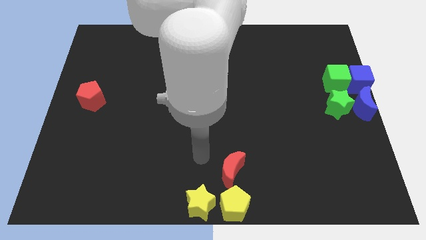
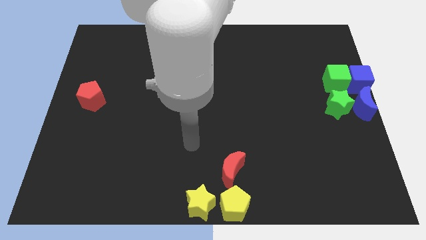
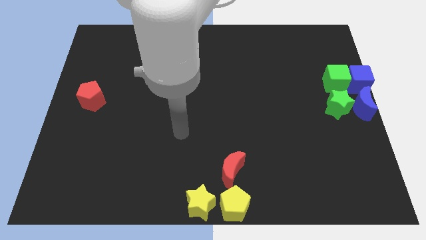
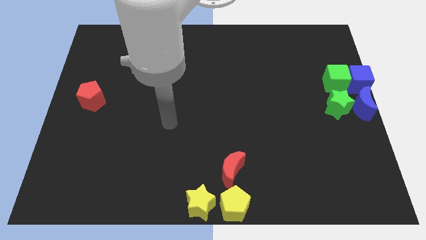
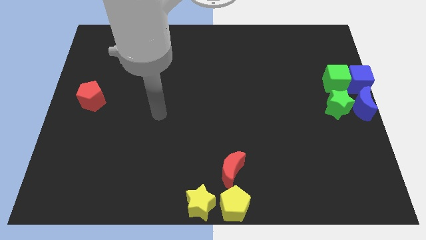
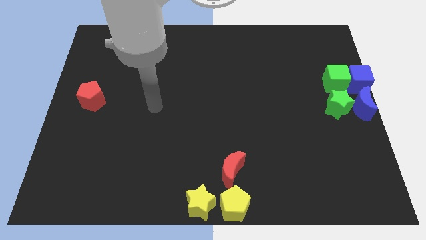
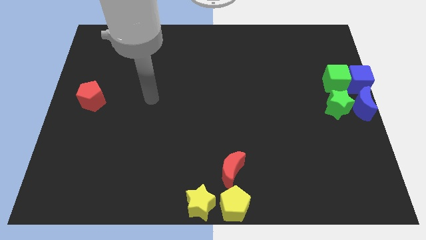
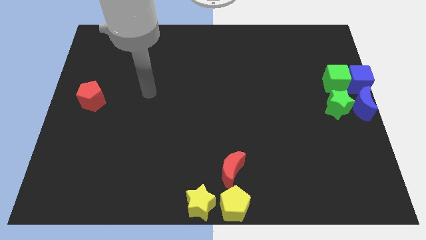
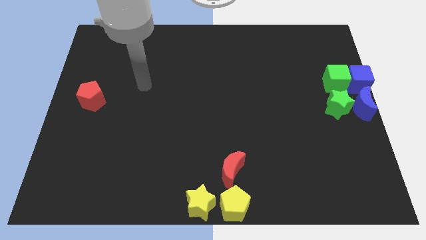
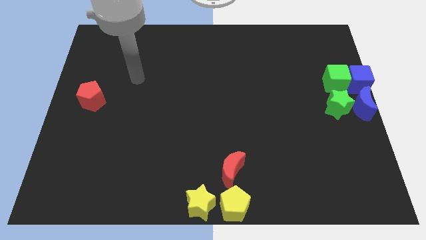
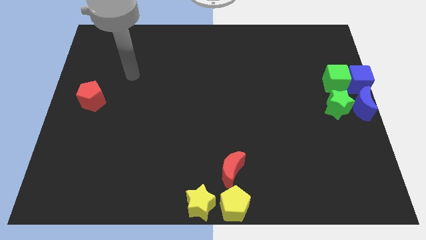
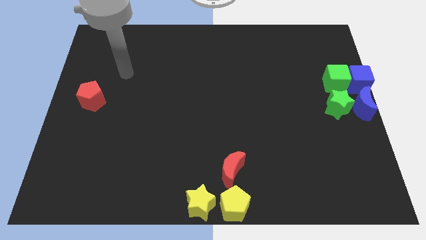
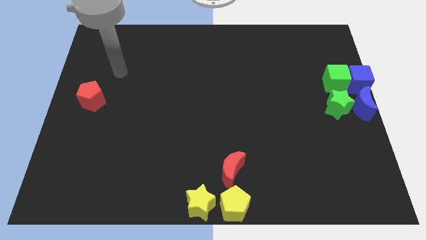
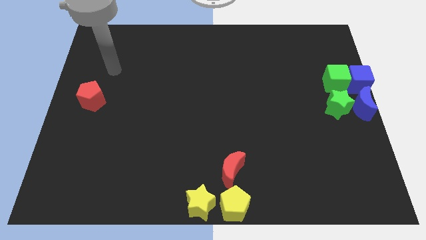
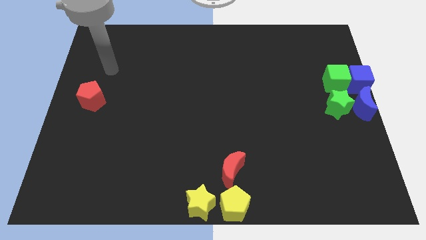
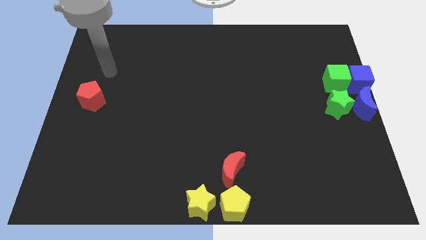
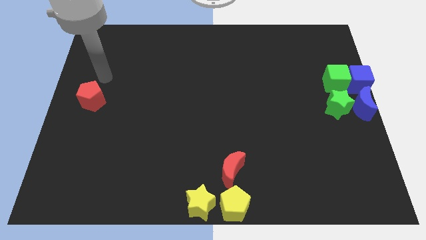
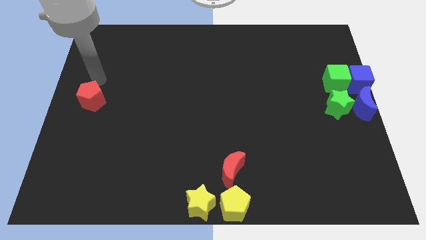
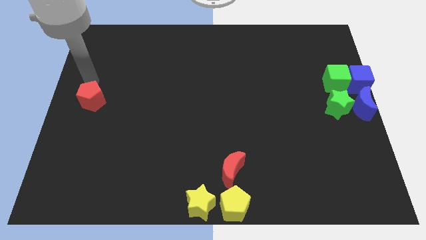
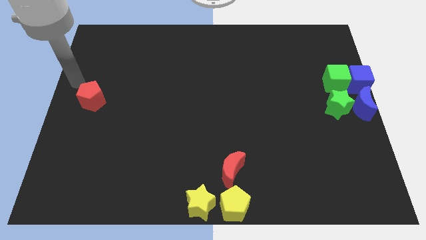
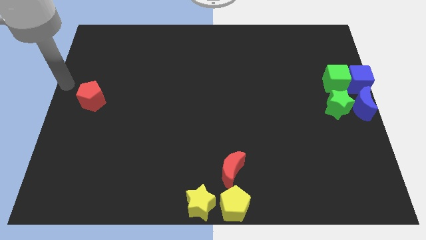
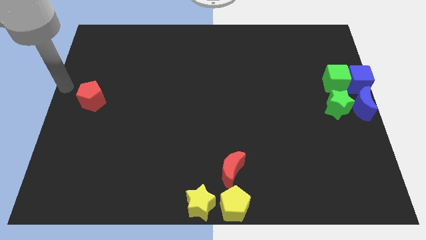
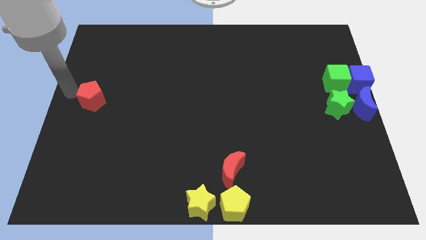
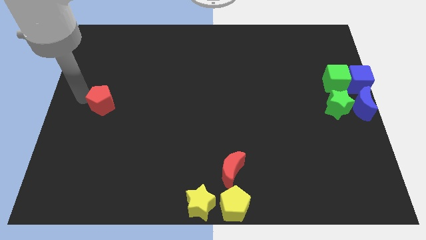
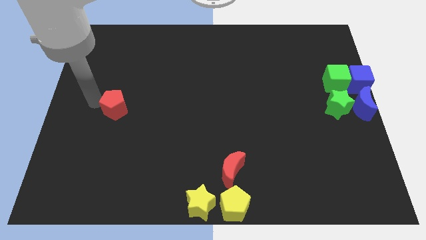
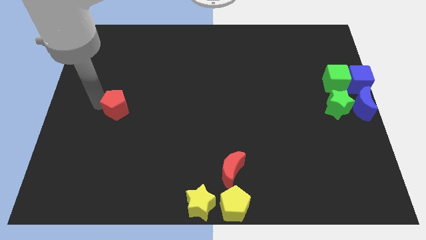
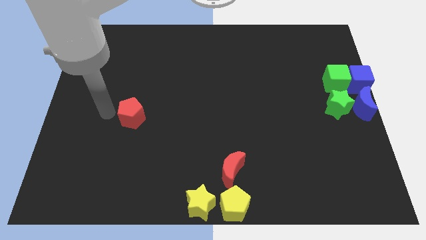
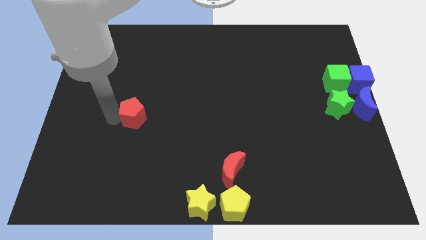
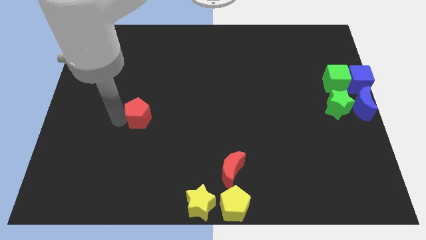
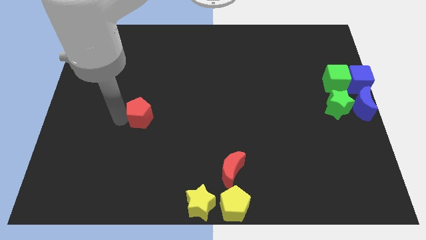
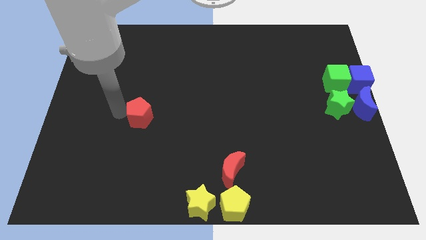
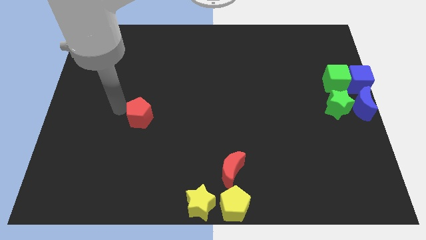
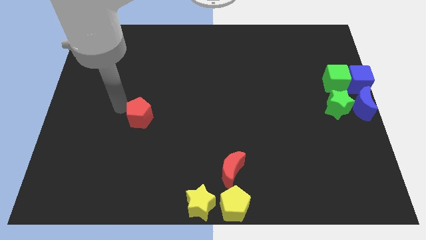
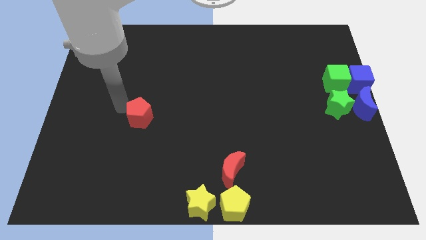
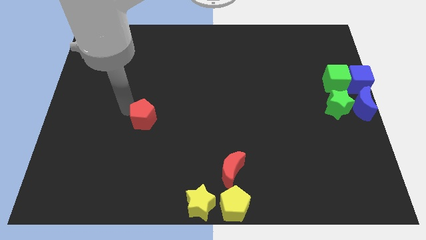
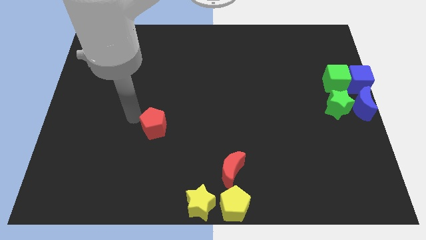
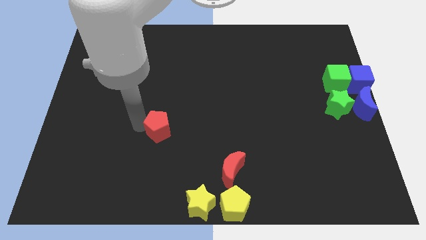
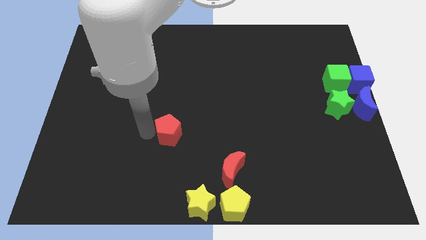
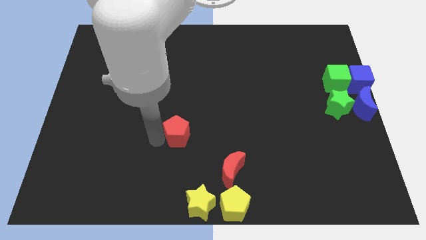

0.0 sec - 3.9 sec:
push the red pentagon towards the bottom center

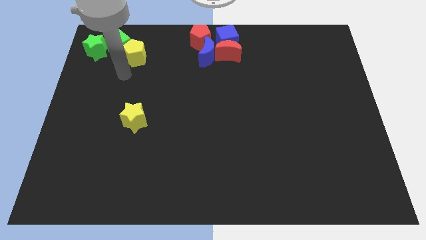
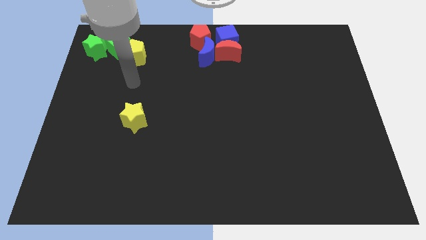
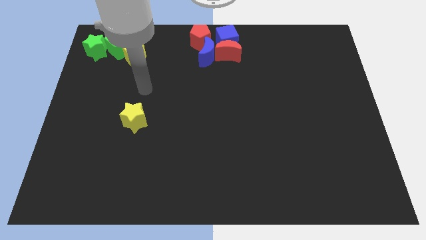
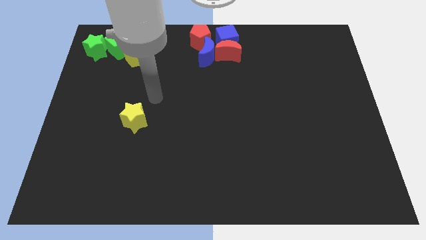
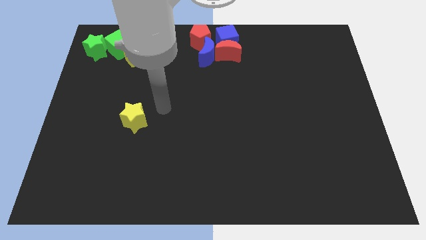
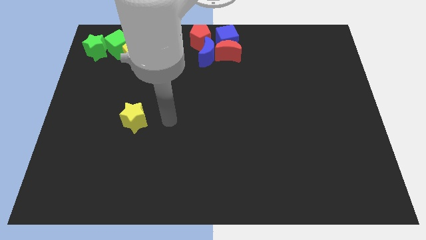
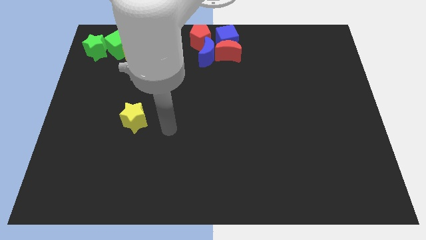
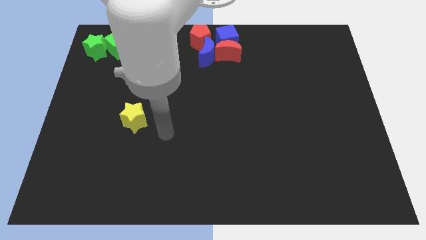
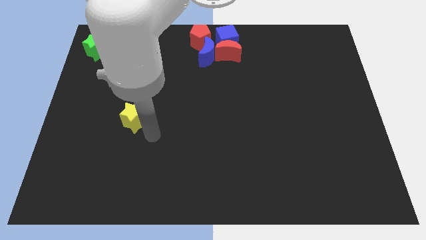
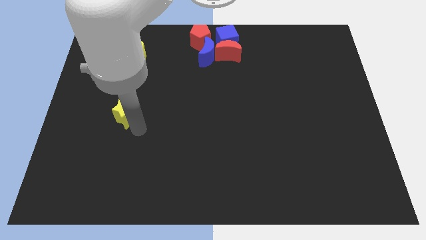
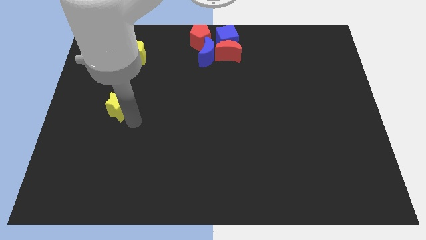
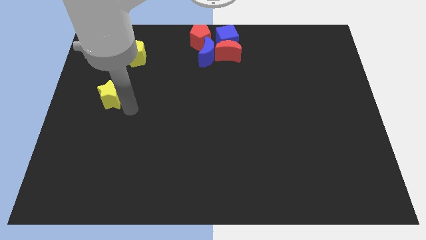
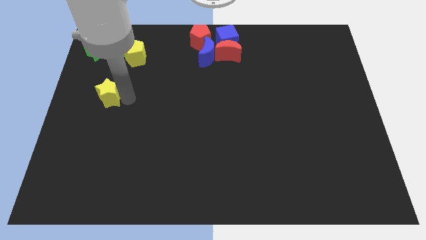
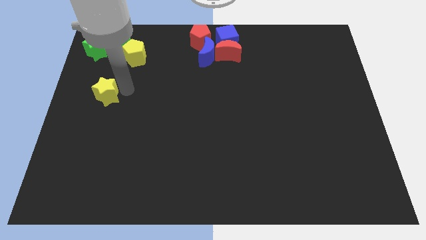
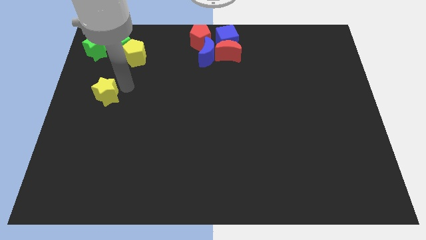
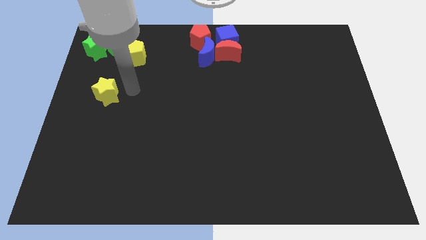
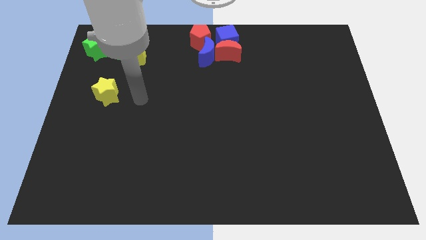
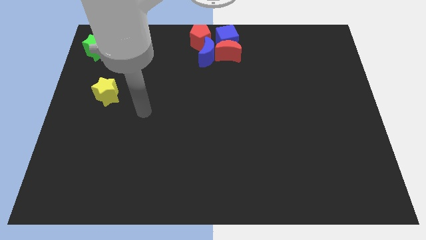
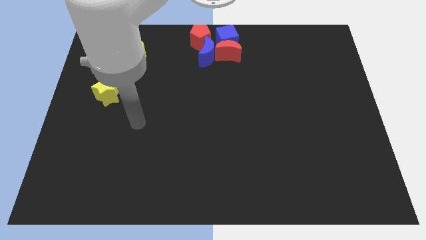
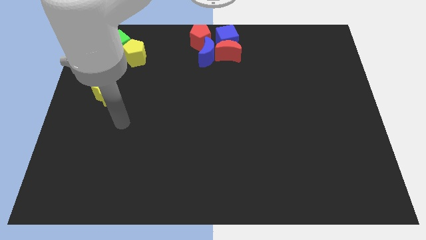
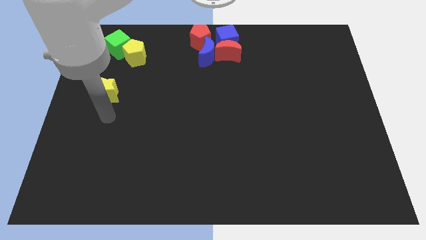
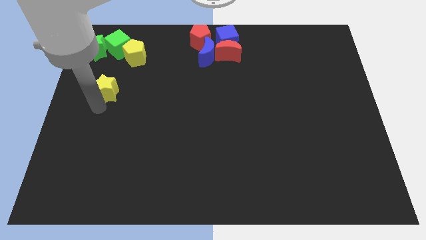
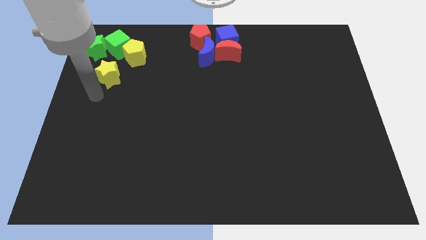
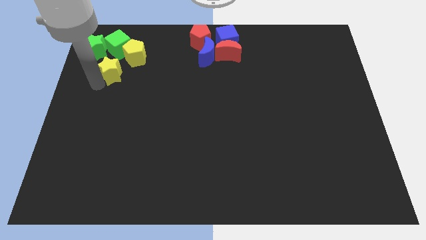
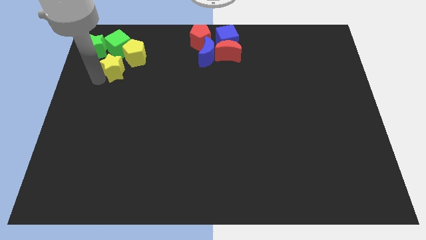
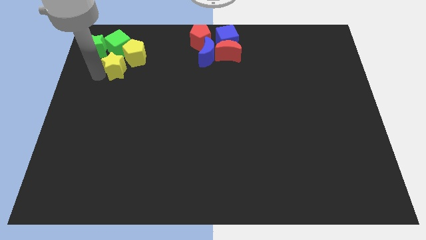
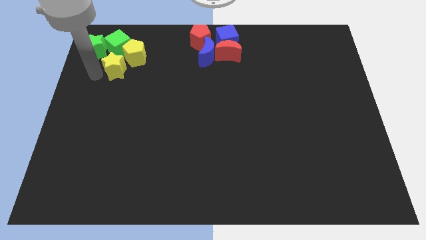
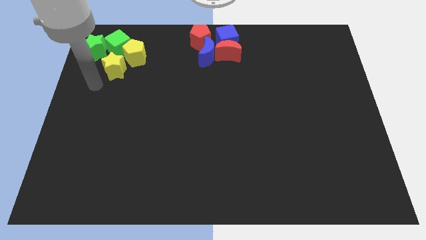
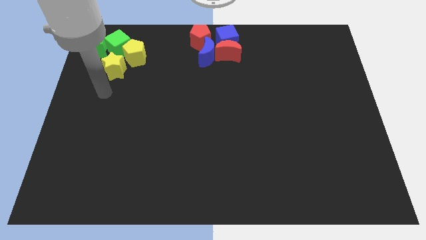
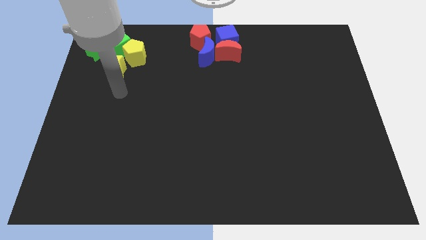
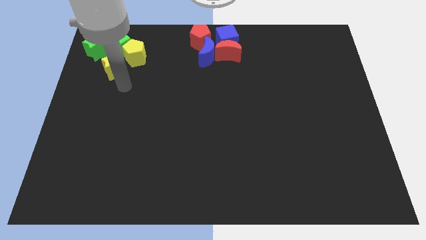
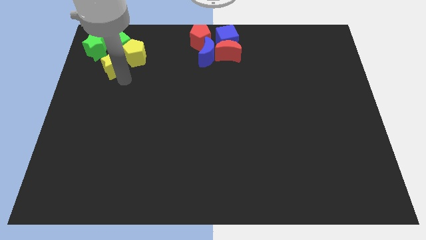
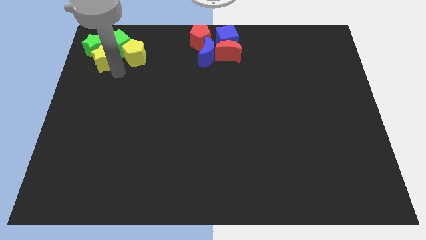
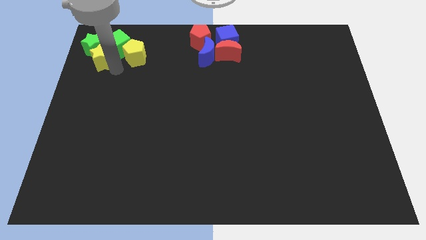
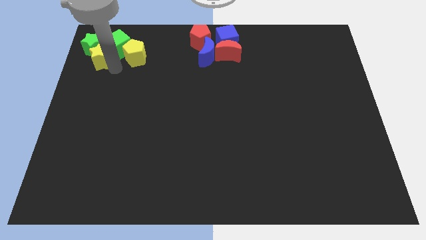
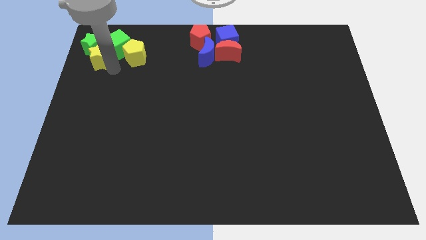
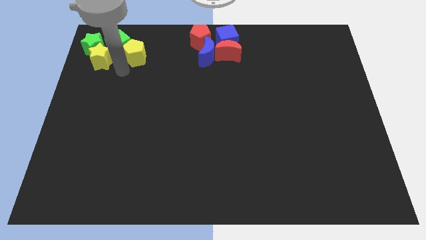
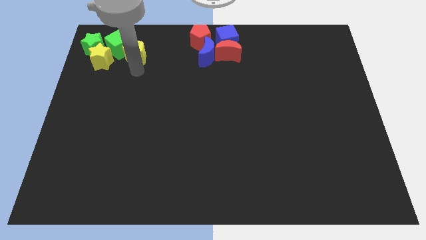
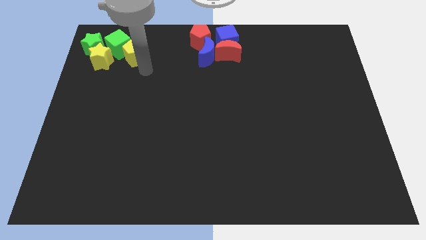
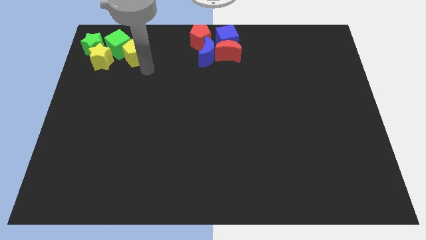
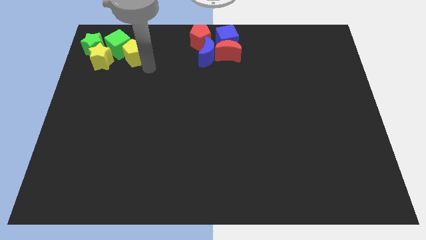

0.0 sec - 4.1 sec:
push yellow star to the top left

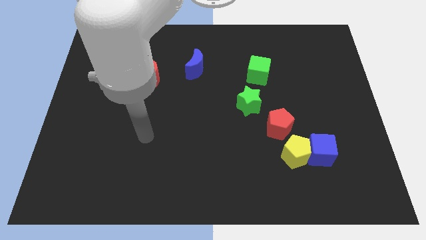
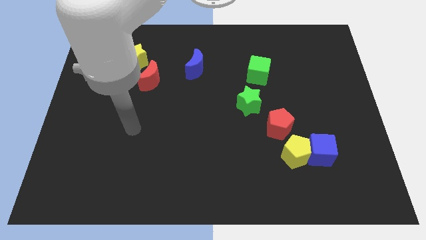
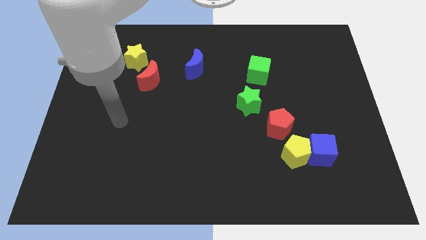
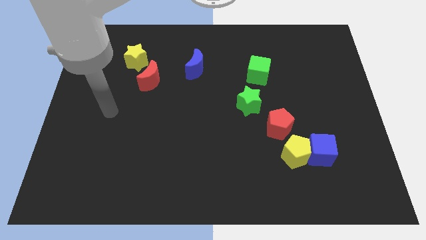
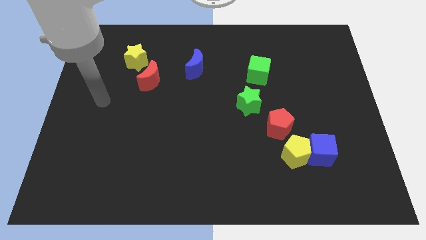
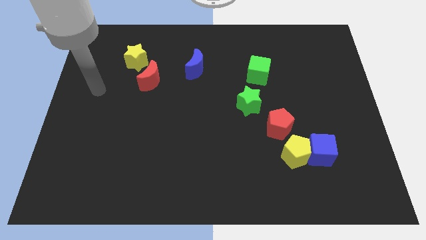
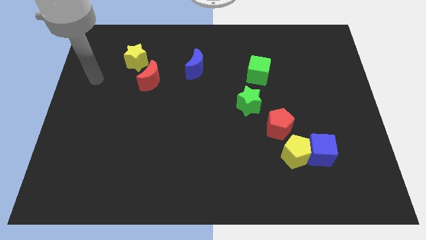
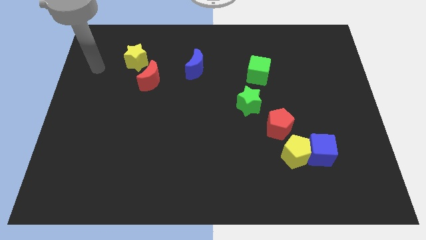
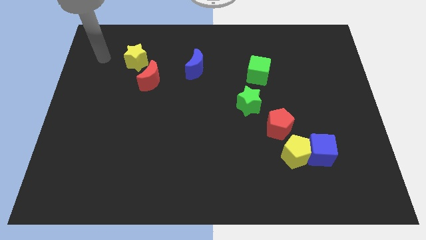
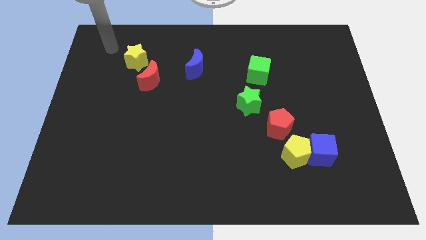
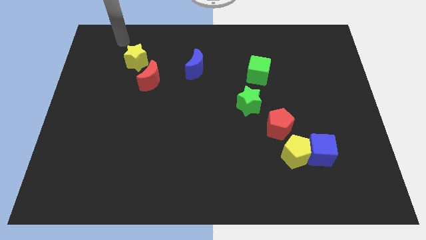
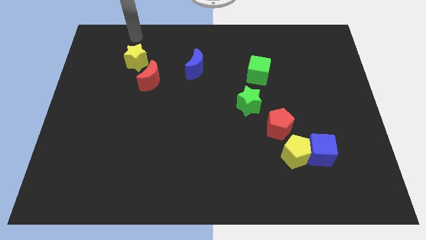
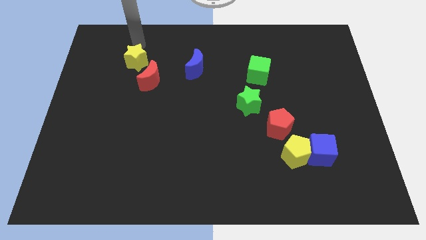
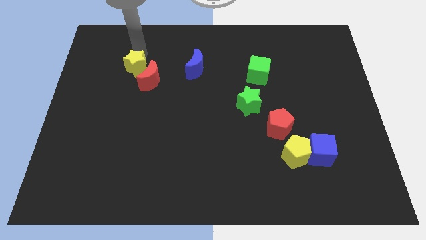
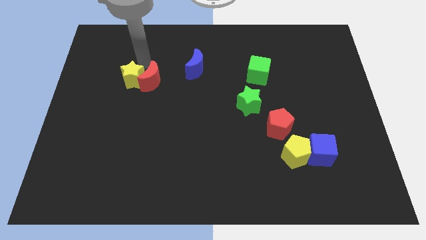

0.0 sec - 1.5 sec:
push the yellow star into the red crescent
